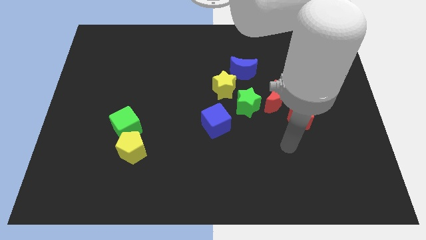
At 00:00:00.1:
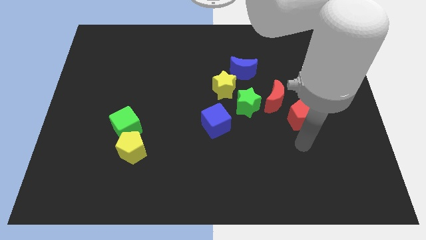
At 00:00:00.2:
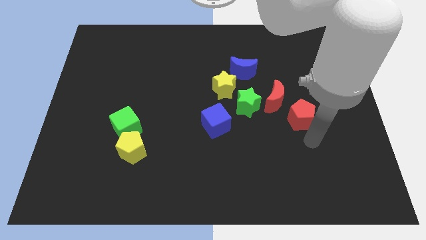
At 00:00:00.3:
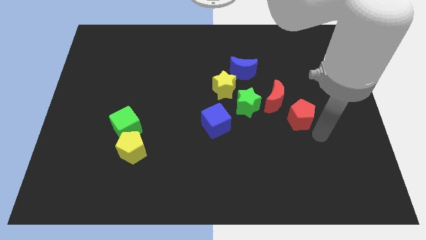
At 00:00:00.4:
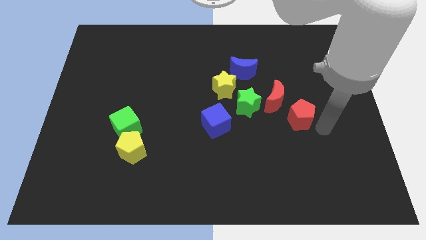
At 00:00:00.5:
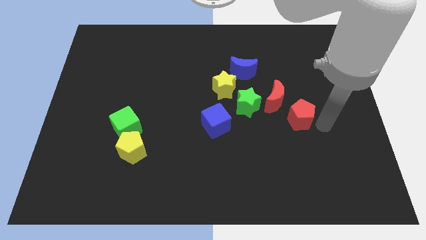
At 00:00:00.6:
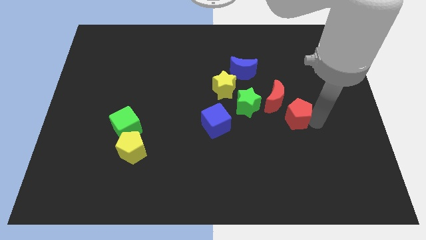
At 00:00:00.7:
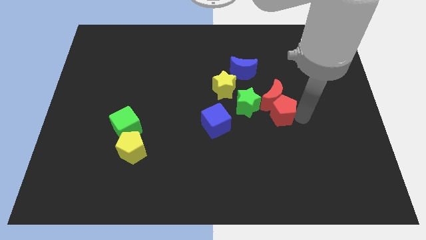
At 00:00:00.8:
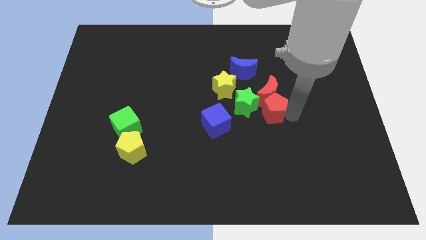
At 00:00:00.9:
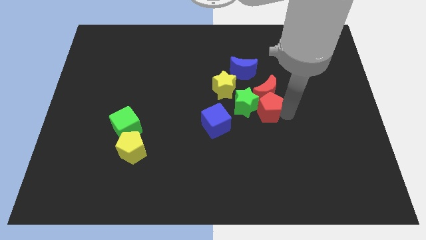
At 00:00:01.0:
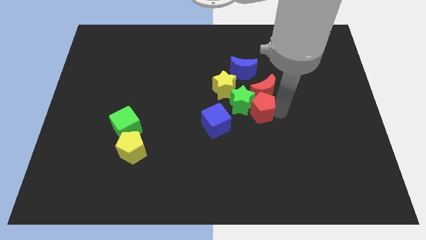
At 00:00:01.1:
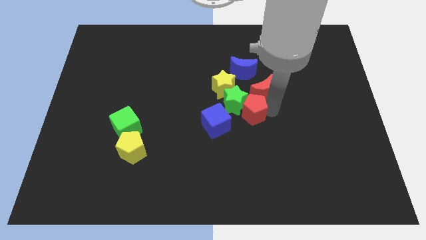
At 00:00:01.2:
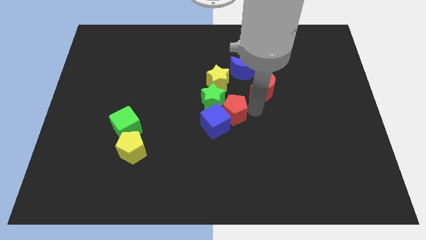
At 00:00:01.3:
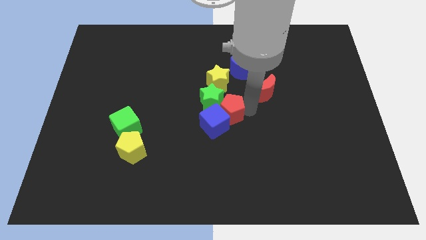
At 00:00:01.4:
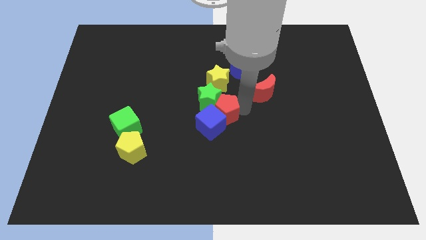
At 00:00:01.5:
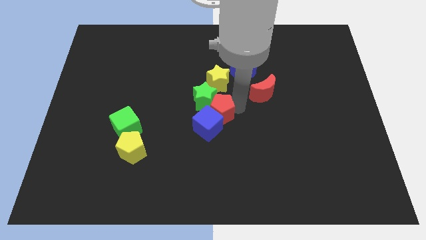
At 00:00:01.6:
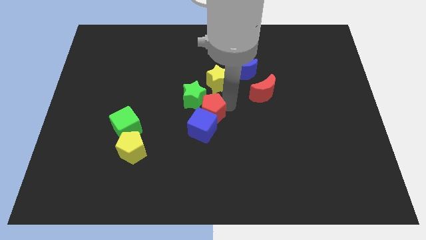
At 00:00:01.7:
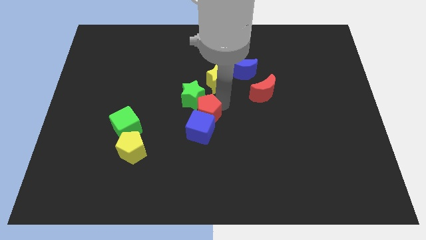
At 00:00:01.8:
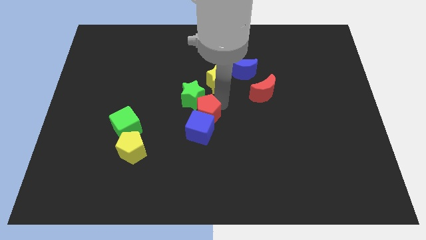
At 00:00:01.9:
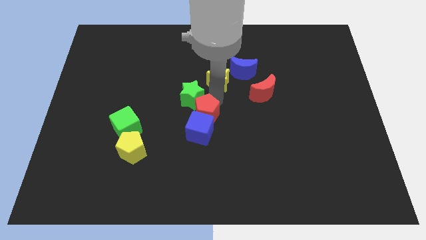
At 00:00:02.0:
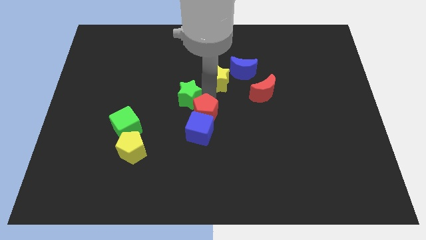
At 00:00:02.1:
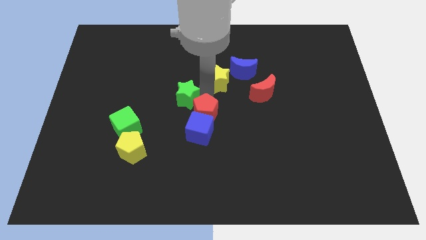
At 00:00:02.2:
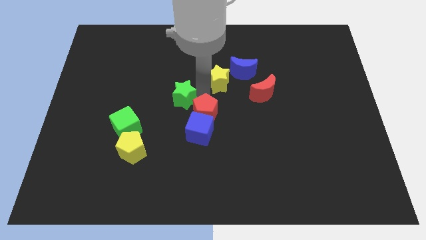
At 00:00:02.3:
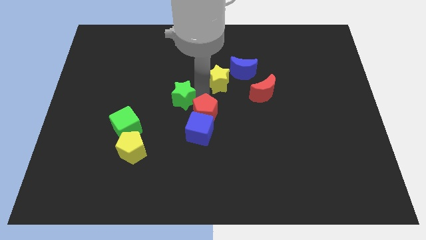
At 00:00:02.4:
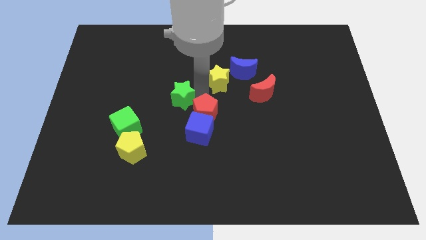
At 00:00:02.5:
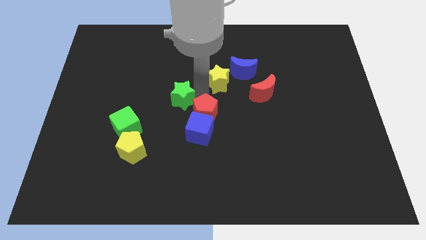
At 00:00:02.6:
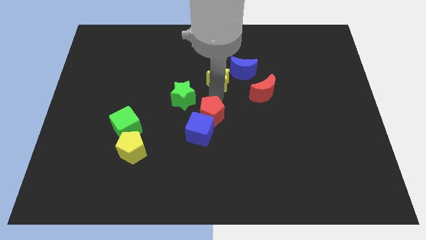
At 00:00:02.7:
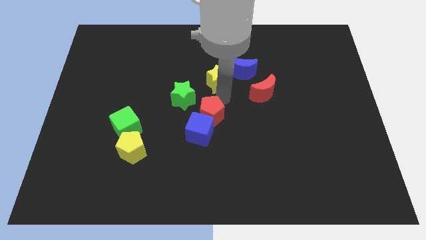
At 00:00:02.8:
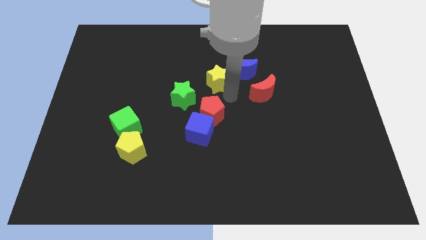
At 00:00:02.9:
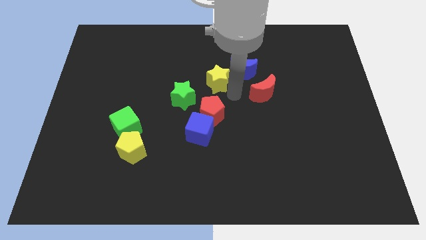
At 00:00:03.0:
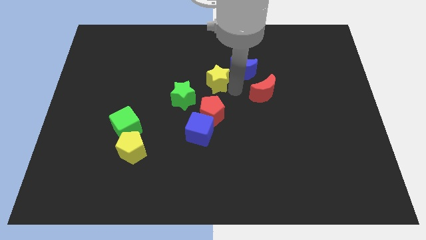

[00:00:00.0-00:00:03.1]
place the green star on the top left of the blue cube

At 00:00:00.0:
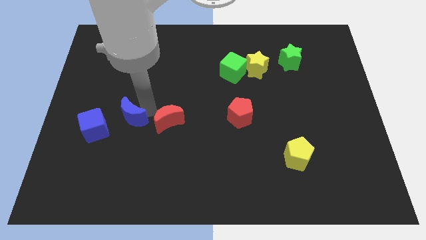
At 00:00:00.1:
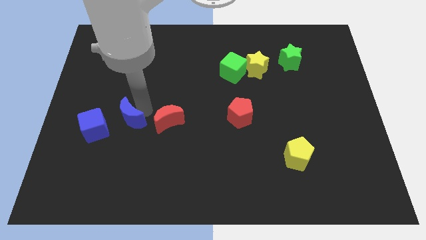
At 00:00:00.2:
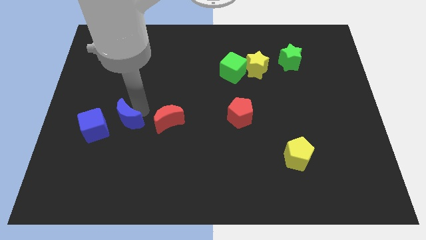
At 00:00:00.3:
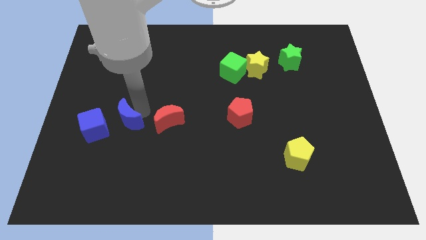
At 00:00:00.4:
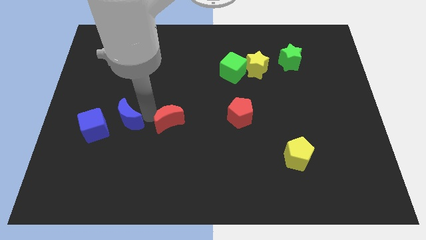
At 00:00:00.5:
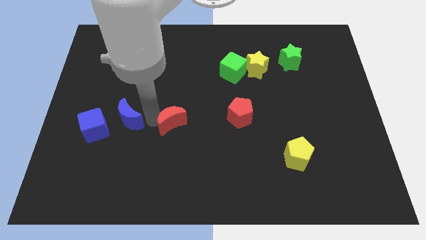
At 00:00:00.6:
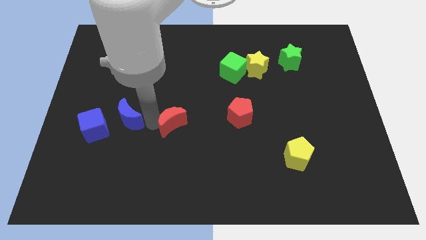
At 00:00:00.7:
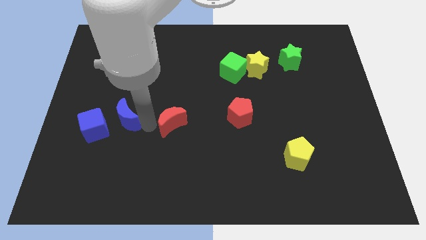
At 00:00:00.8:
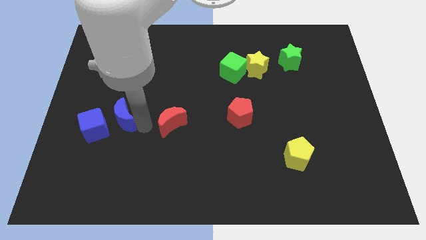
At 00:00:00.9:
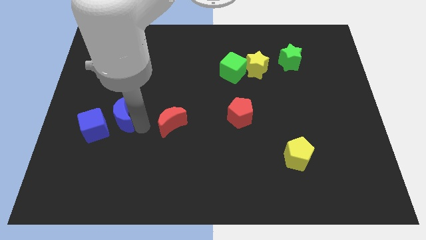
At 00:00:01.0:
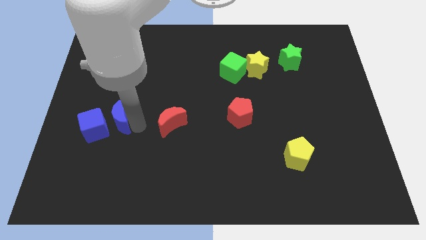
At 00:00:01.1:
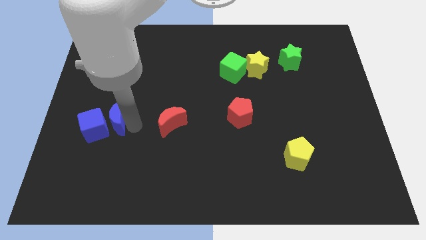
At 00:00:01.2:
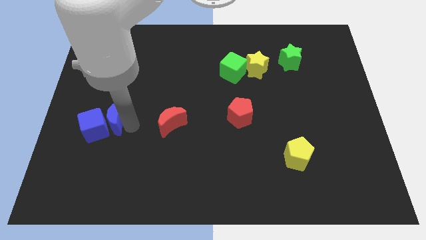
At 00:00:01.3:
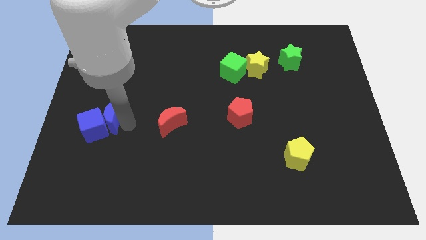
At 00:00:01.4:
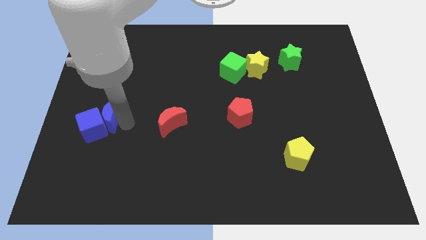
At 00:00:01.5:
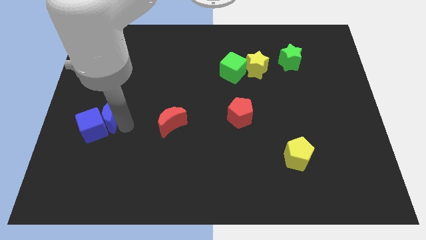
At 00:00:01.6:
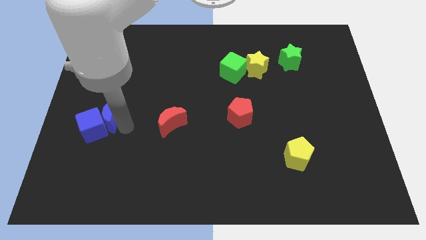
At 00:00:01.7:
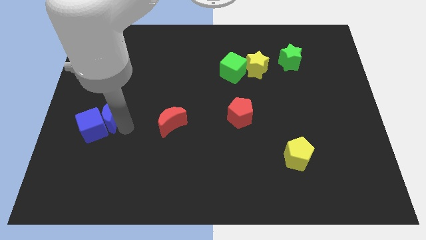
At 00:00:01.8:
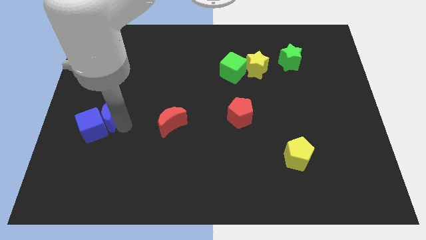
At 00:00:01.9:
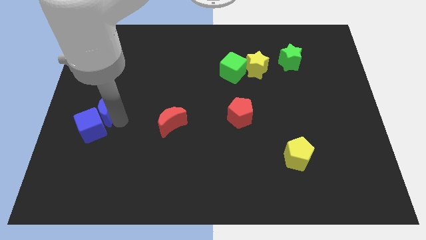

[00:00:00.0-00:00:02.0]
push the blue moon into the blue cube

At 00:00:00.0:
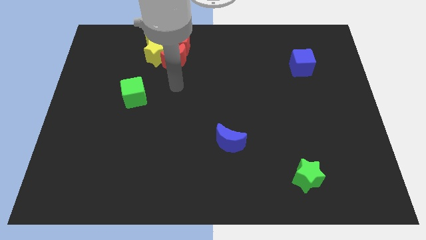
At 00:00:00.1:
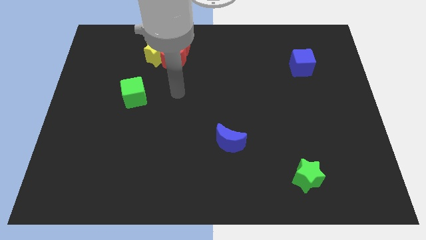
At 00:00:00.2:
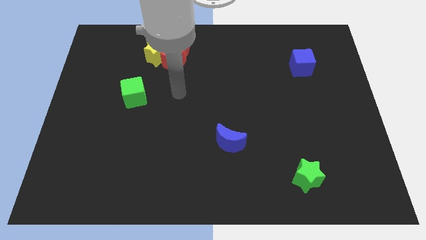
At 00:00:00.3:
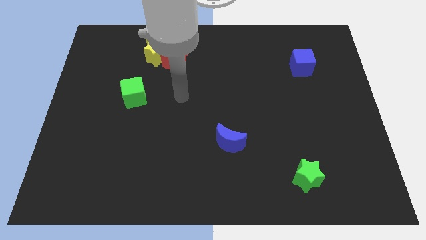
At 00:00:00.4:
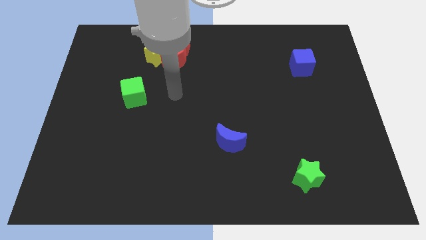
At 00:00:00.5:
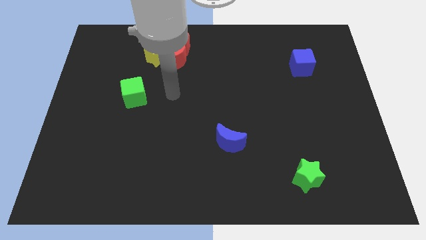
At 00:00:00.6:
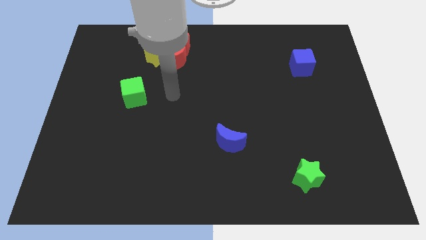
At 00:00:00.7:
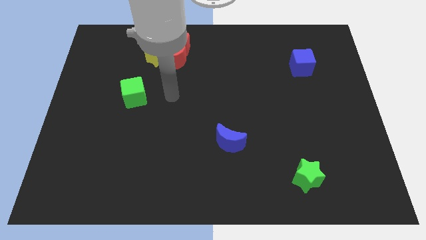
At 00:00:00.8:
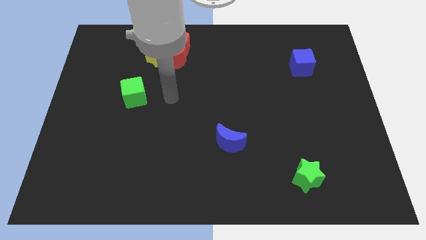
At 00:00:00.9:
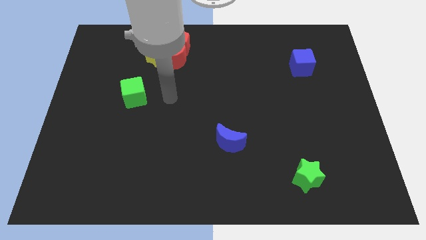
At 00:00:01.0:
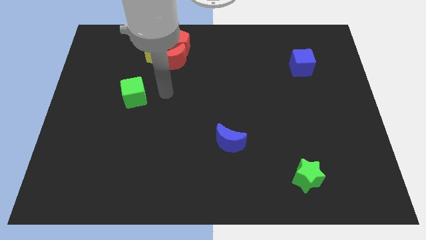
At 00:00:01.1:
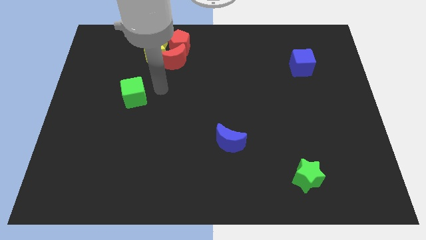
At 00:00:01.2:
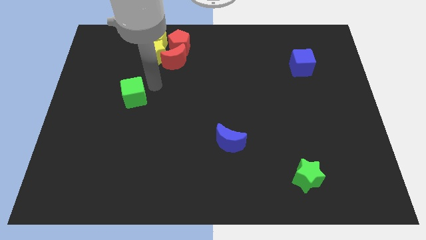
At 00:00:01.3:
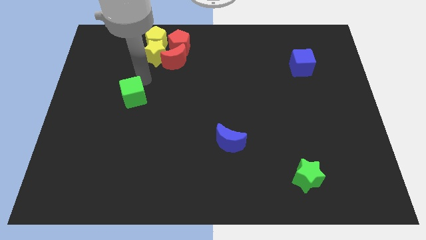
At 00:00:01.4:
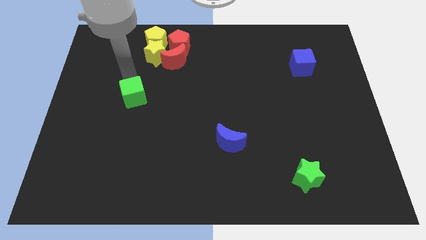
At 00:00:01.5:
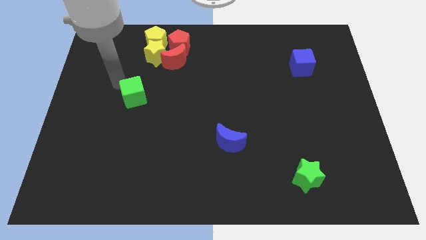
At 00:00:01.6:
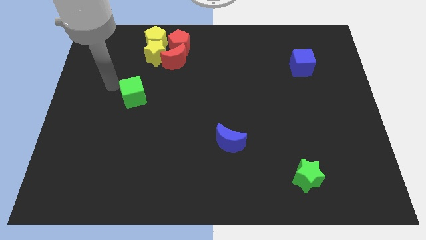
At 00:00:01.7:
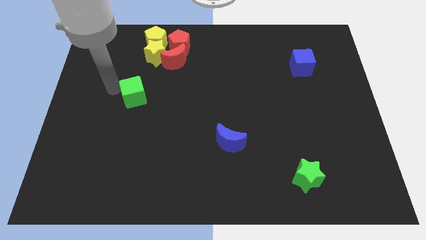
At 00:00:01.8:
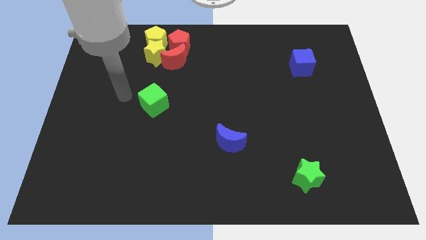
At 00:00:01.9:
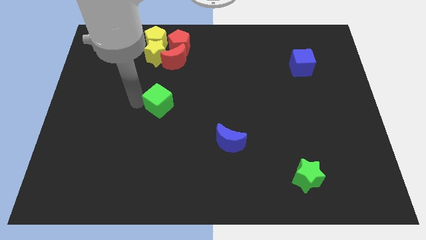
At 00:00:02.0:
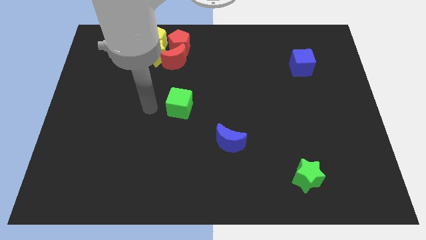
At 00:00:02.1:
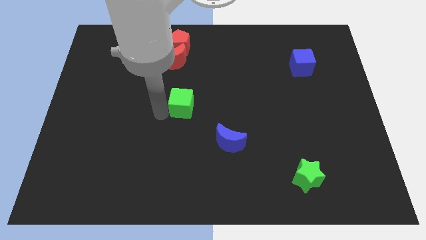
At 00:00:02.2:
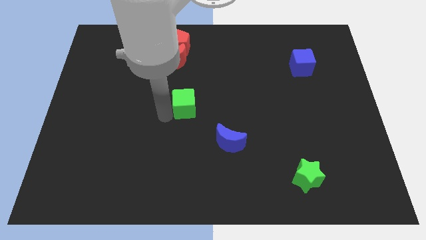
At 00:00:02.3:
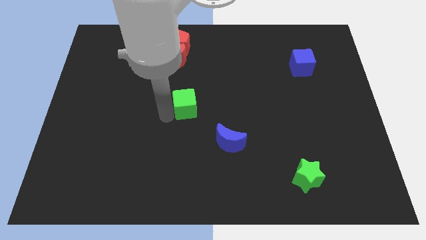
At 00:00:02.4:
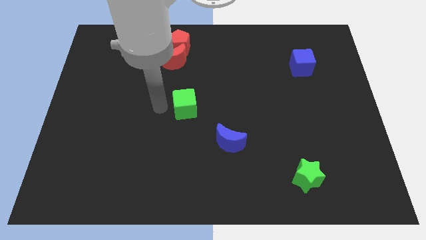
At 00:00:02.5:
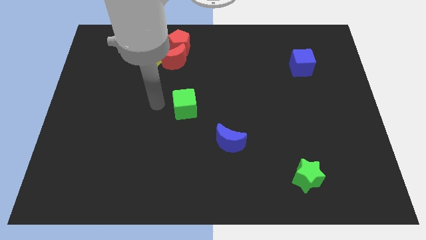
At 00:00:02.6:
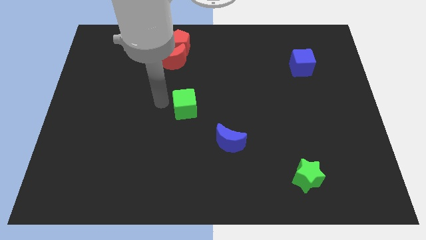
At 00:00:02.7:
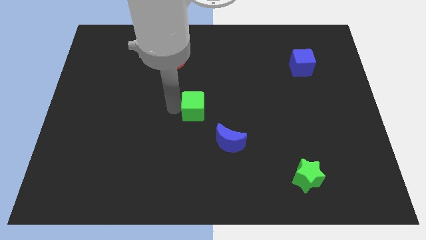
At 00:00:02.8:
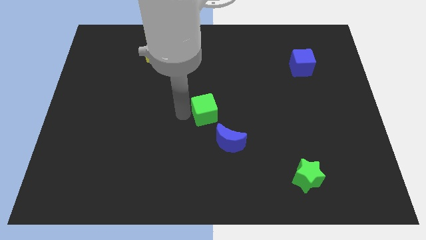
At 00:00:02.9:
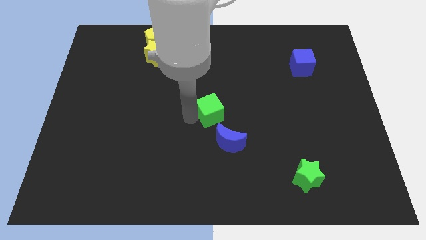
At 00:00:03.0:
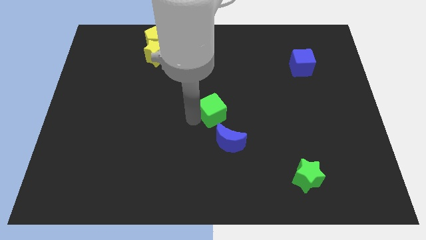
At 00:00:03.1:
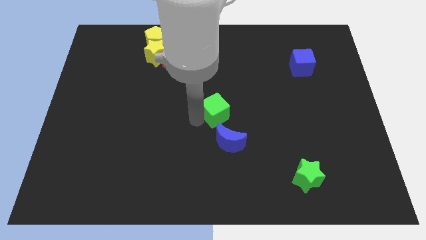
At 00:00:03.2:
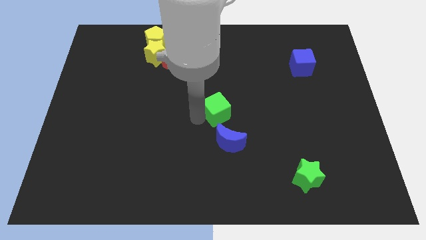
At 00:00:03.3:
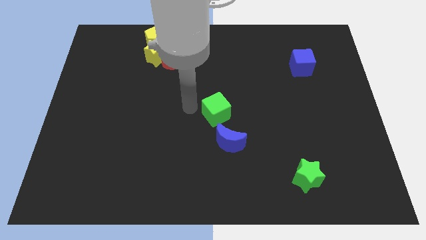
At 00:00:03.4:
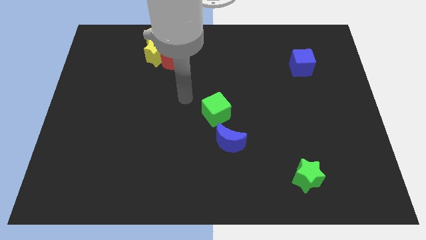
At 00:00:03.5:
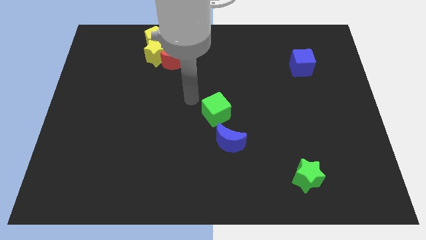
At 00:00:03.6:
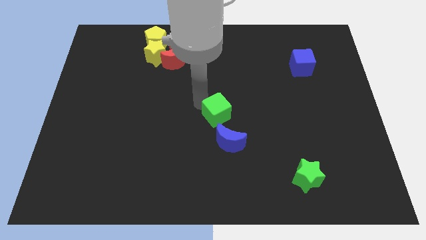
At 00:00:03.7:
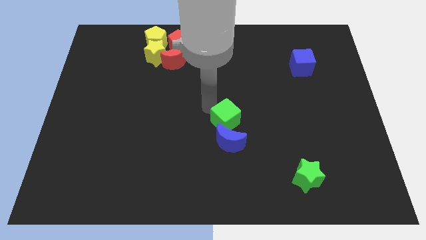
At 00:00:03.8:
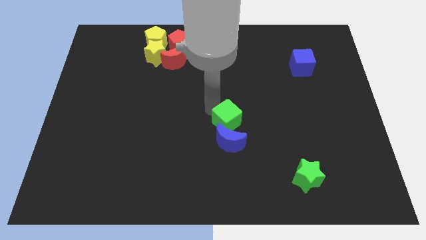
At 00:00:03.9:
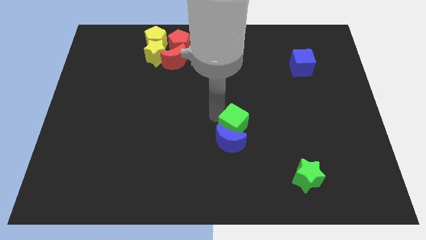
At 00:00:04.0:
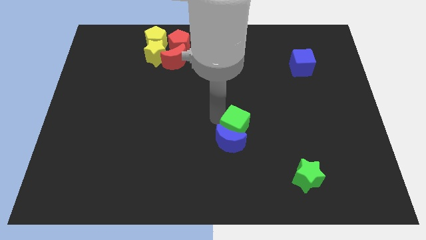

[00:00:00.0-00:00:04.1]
place the green cube above the blue crescent
